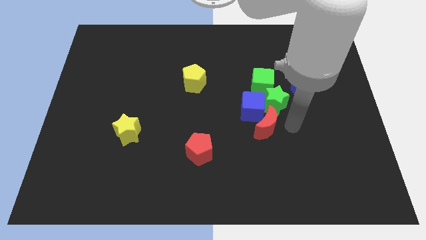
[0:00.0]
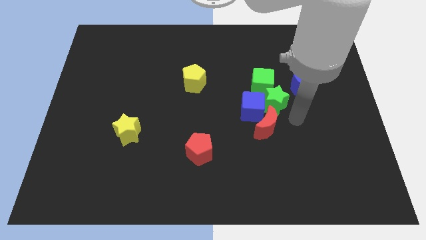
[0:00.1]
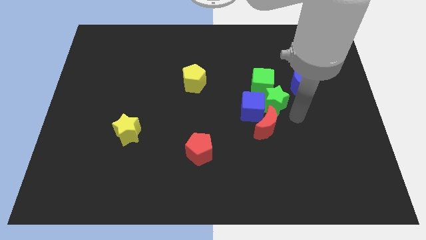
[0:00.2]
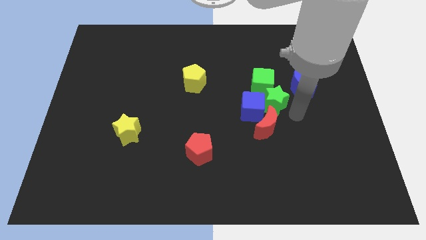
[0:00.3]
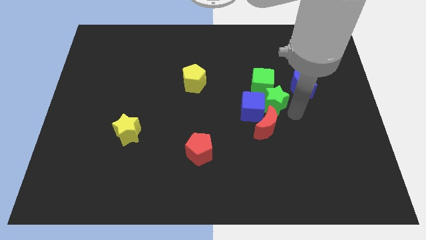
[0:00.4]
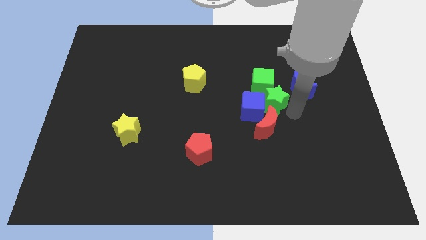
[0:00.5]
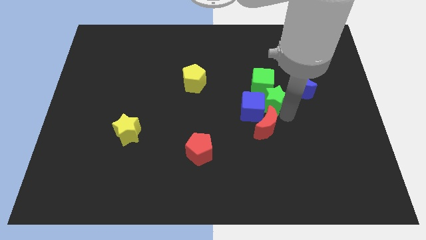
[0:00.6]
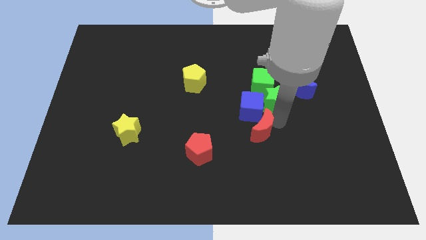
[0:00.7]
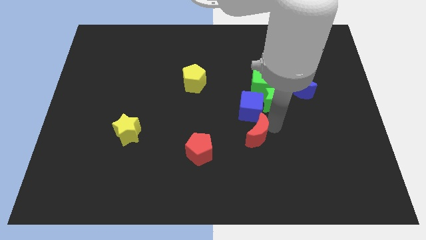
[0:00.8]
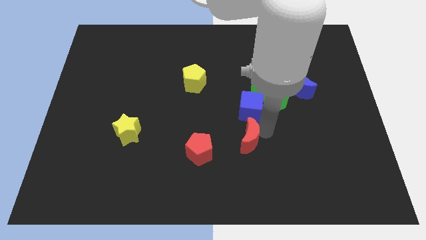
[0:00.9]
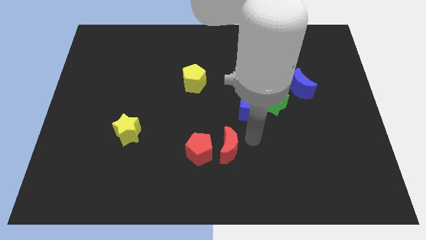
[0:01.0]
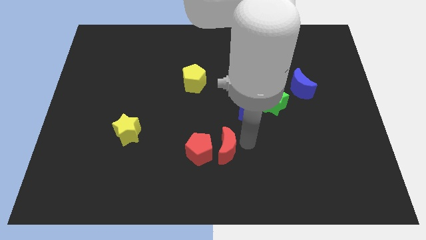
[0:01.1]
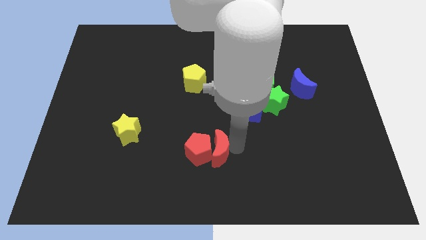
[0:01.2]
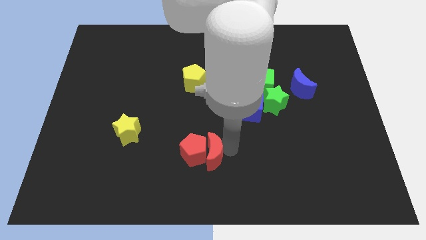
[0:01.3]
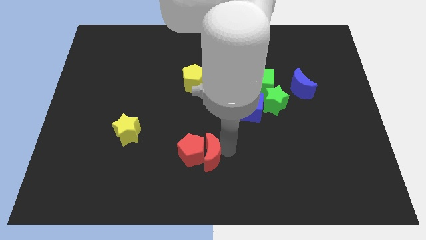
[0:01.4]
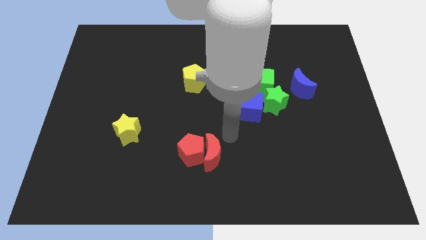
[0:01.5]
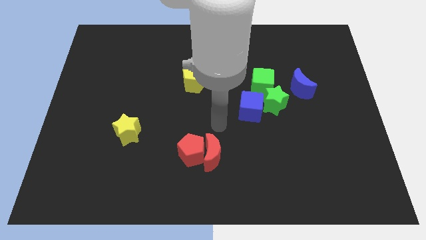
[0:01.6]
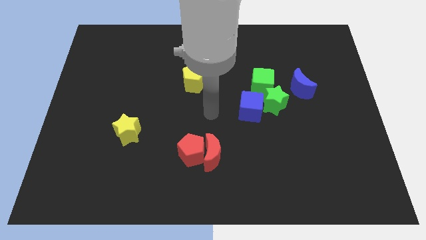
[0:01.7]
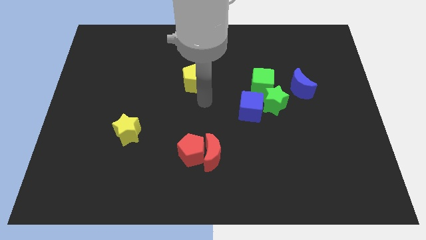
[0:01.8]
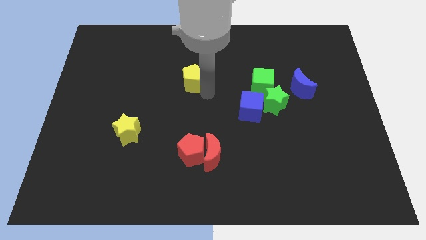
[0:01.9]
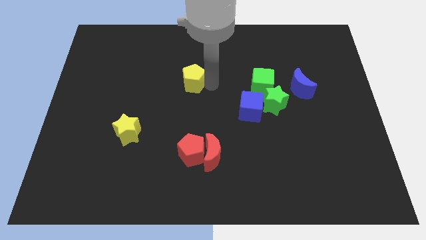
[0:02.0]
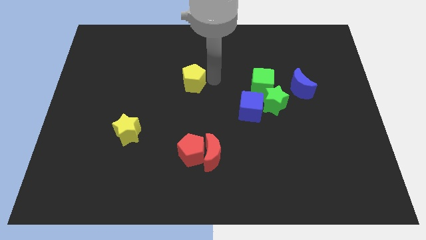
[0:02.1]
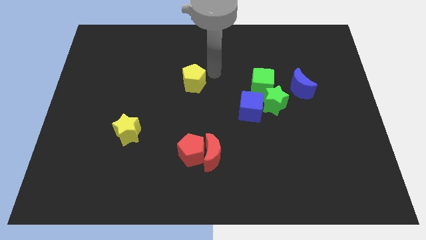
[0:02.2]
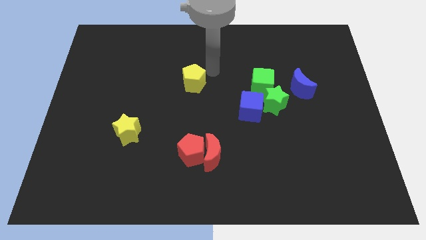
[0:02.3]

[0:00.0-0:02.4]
push the red moon into the red pentagon

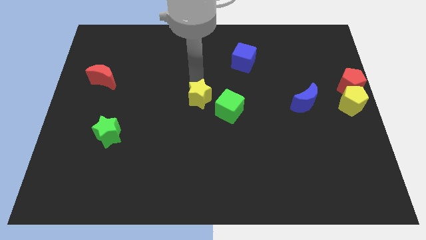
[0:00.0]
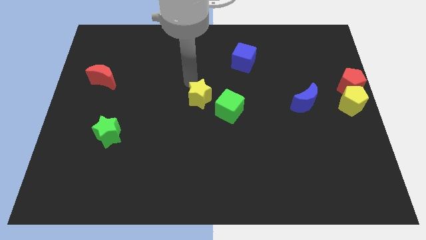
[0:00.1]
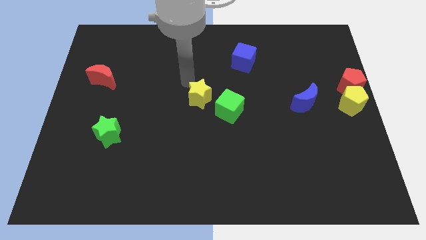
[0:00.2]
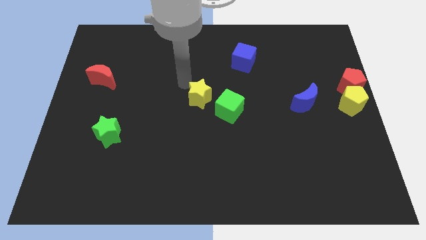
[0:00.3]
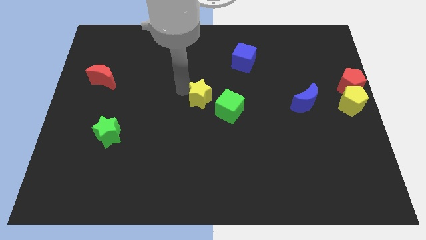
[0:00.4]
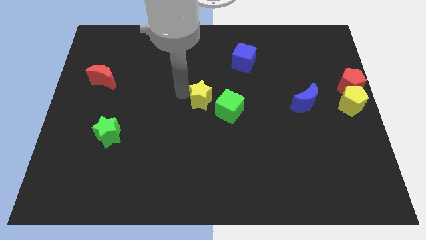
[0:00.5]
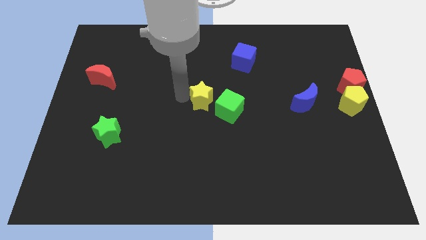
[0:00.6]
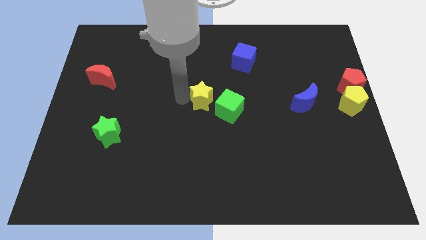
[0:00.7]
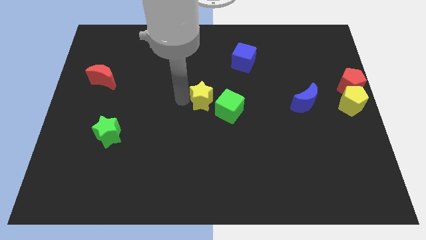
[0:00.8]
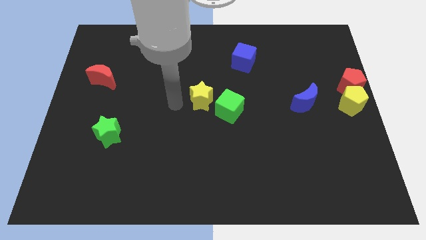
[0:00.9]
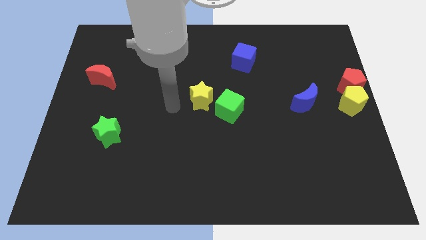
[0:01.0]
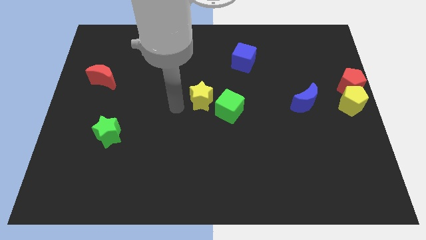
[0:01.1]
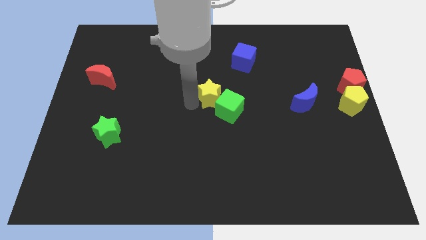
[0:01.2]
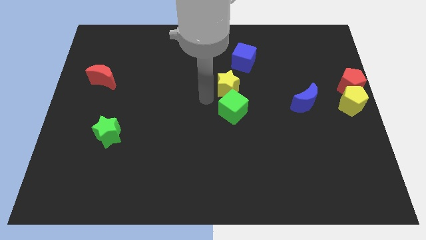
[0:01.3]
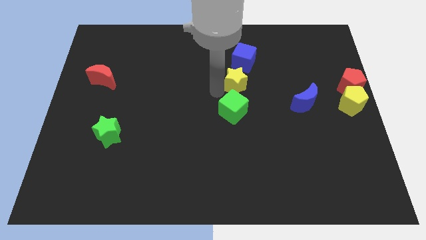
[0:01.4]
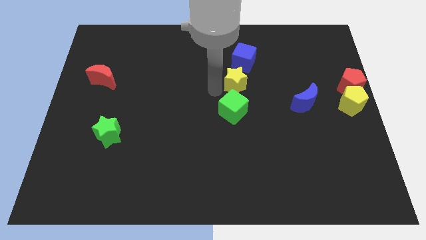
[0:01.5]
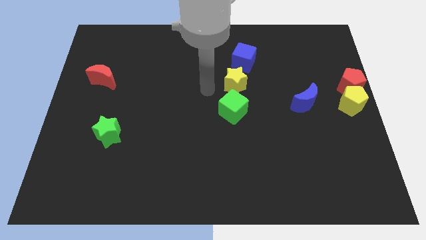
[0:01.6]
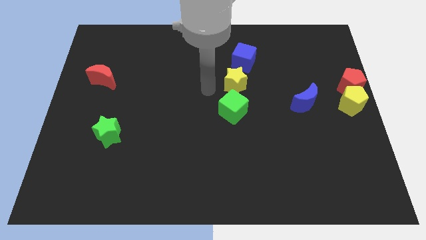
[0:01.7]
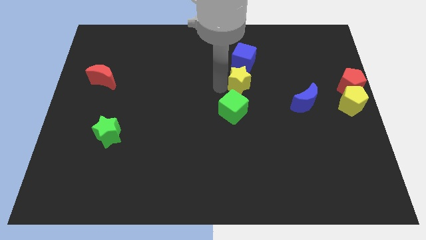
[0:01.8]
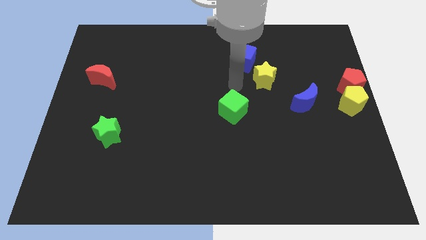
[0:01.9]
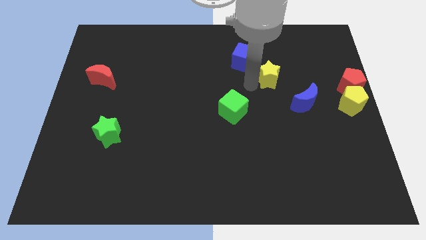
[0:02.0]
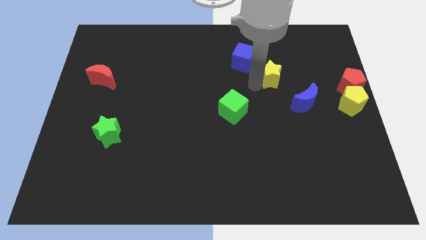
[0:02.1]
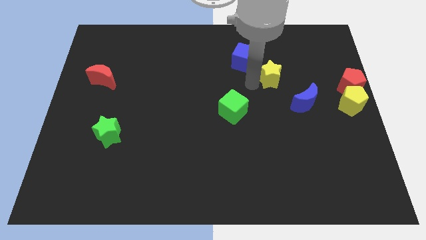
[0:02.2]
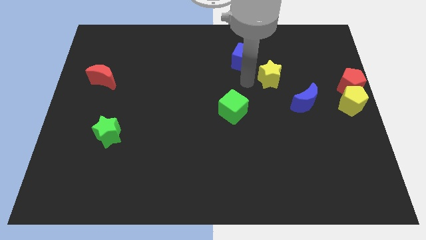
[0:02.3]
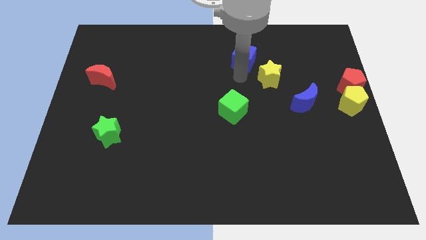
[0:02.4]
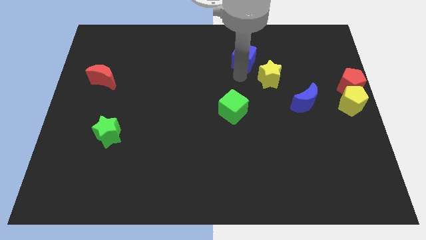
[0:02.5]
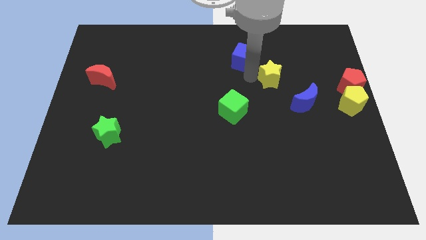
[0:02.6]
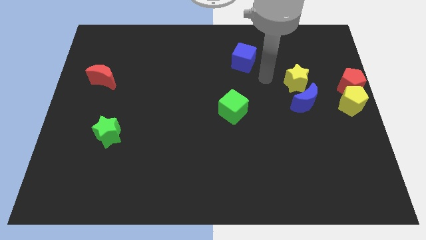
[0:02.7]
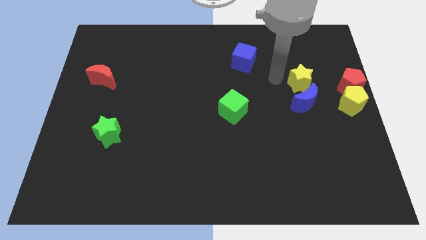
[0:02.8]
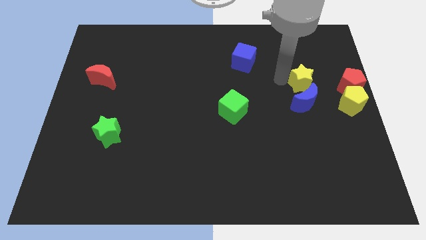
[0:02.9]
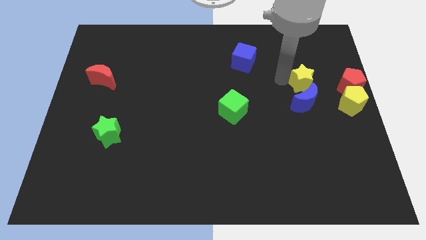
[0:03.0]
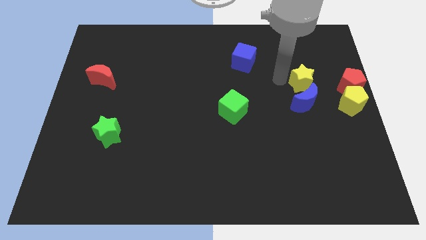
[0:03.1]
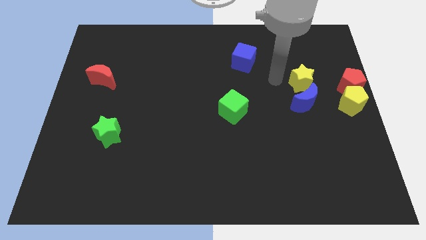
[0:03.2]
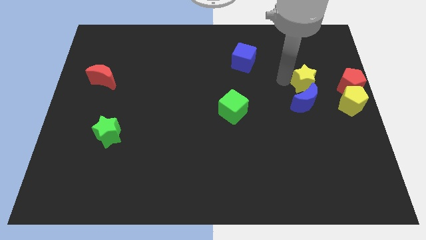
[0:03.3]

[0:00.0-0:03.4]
push yellow star above blue crescent

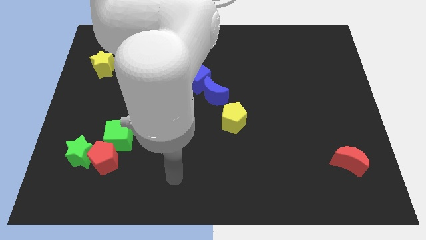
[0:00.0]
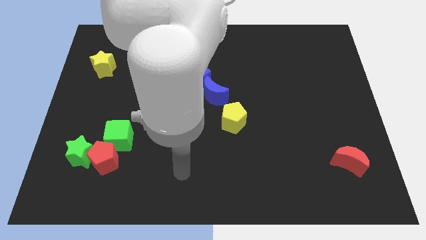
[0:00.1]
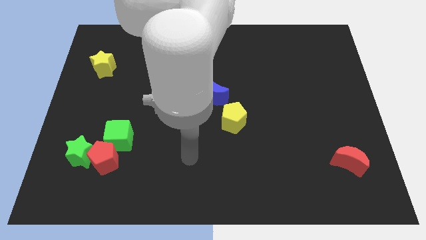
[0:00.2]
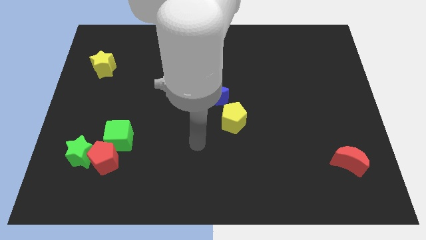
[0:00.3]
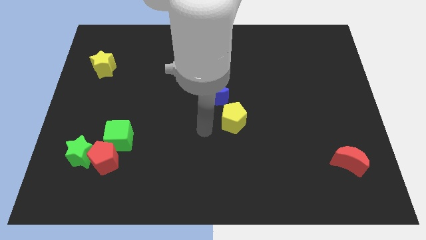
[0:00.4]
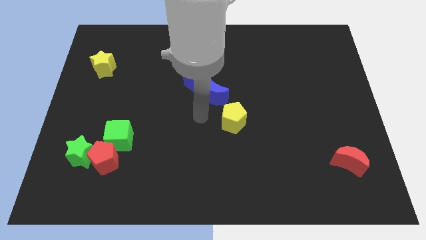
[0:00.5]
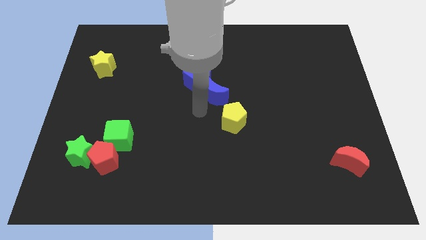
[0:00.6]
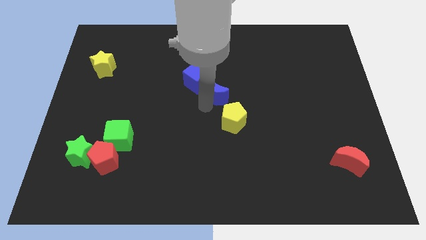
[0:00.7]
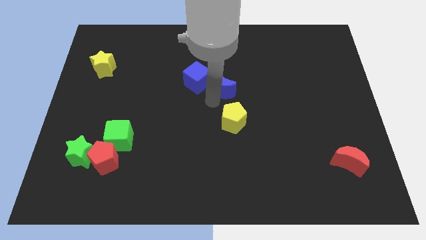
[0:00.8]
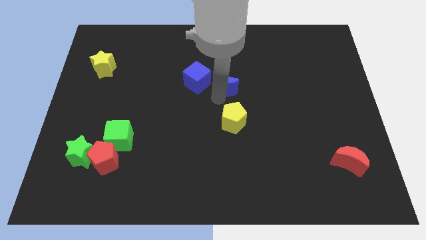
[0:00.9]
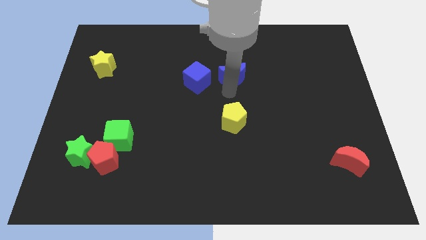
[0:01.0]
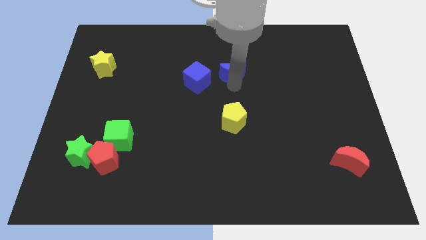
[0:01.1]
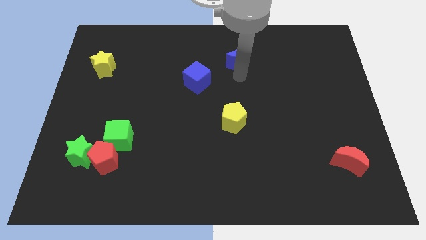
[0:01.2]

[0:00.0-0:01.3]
move the blue crescent away from blue cube

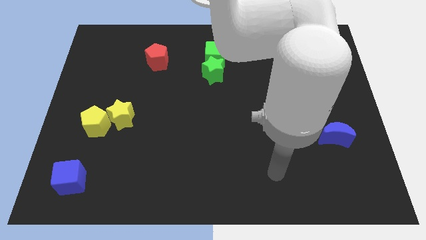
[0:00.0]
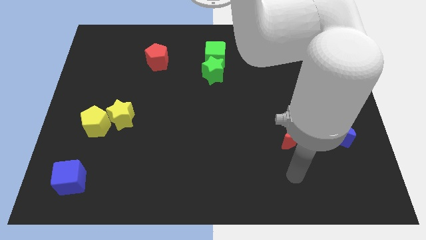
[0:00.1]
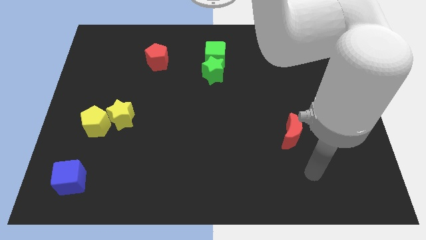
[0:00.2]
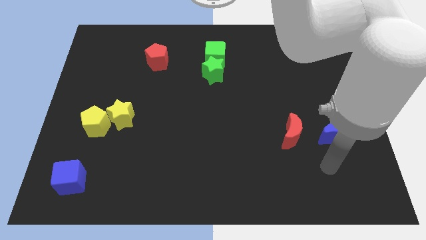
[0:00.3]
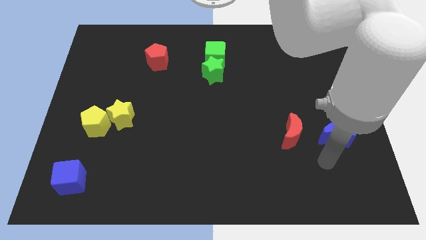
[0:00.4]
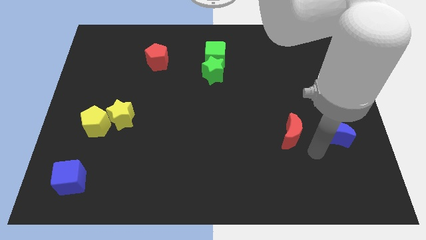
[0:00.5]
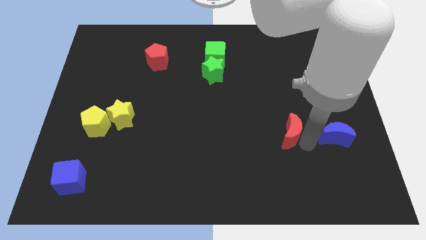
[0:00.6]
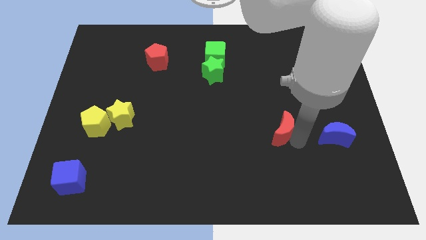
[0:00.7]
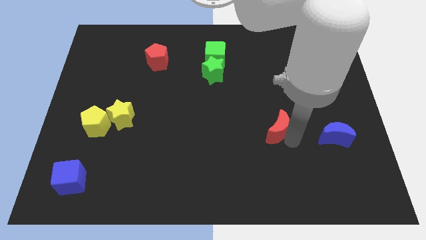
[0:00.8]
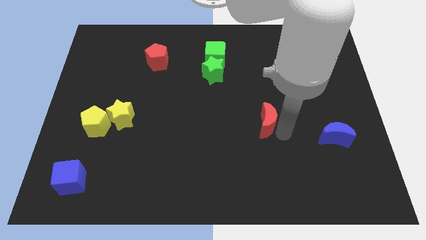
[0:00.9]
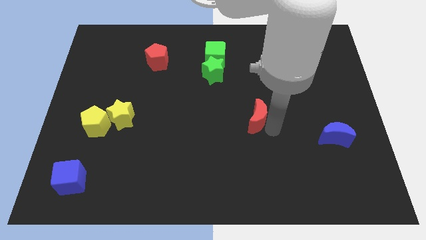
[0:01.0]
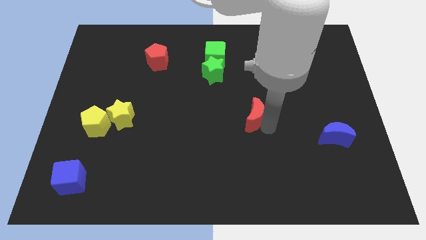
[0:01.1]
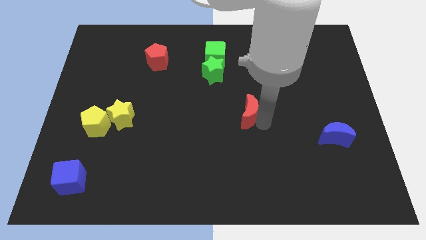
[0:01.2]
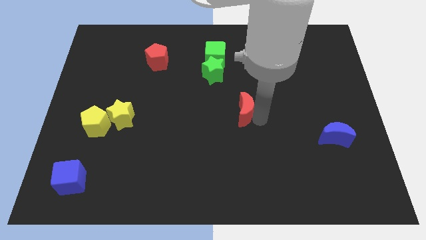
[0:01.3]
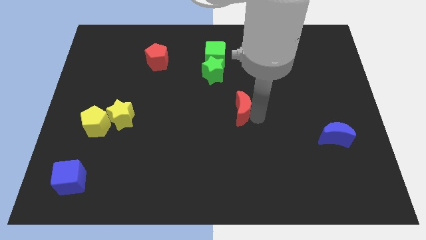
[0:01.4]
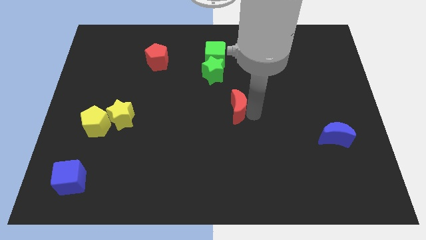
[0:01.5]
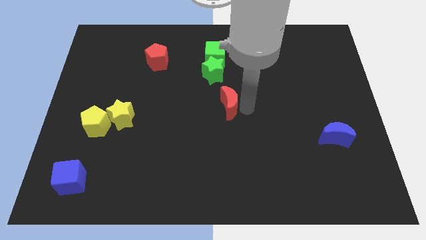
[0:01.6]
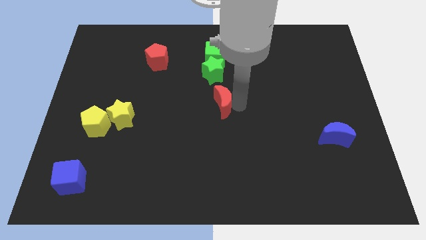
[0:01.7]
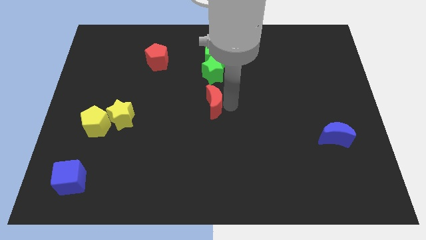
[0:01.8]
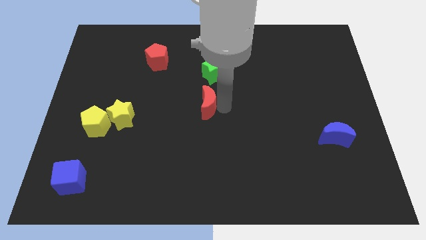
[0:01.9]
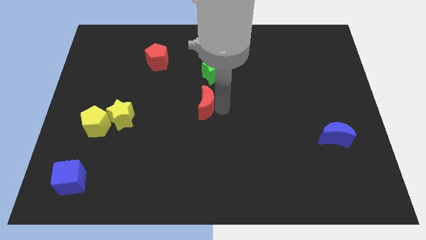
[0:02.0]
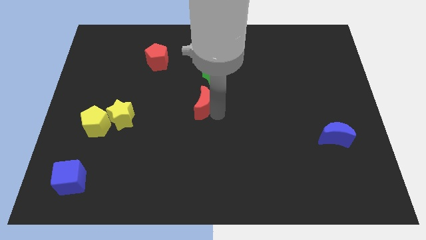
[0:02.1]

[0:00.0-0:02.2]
move the red crescent to the center of the board
